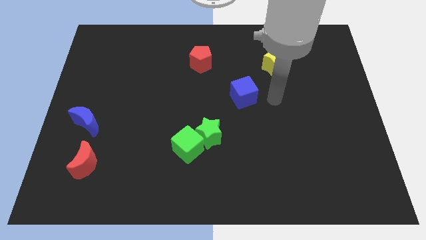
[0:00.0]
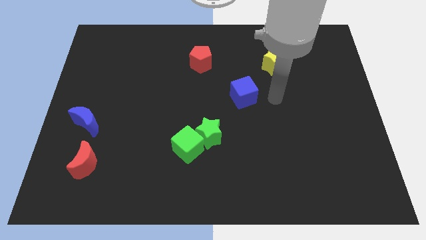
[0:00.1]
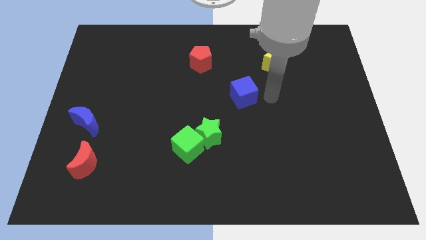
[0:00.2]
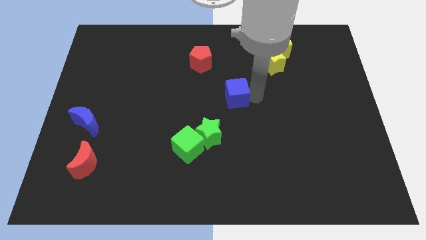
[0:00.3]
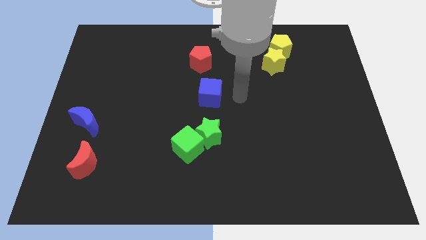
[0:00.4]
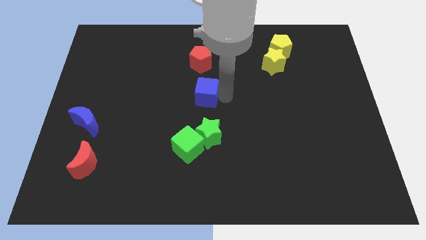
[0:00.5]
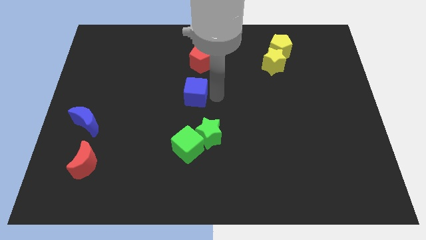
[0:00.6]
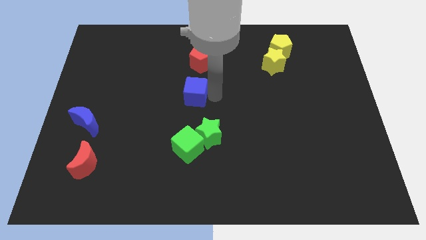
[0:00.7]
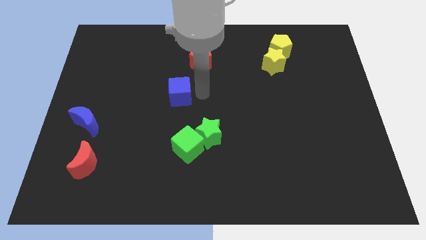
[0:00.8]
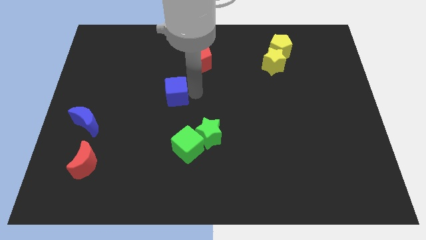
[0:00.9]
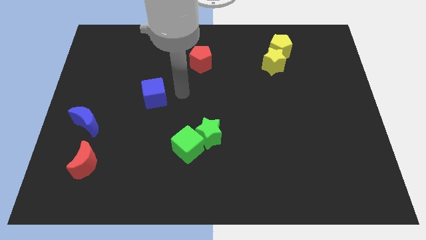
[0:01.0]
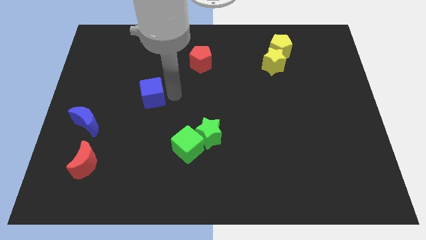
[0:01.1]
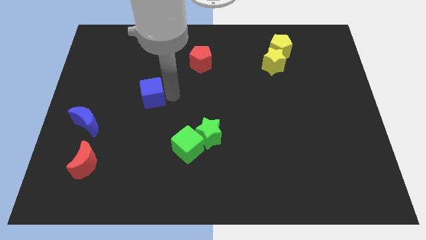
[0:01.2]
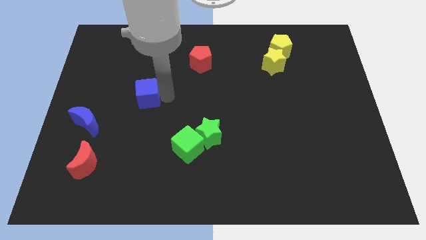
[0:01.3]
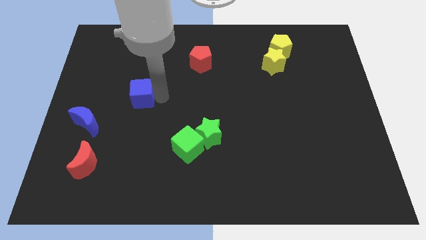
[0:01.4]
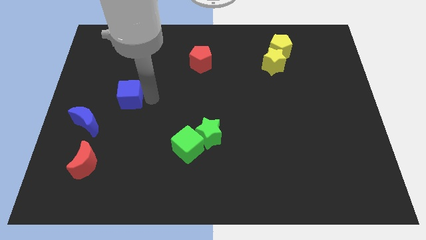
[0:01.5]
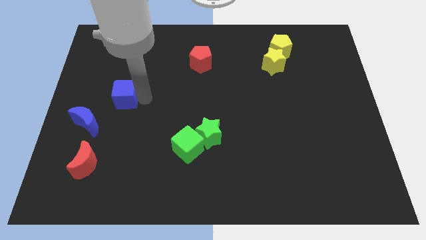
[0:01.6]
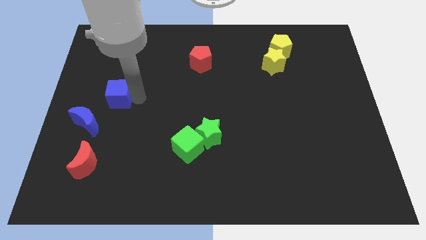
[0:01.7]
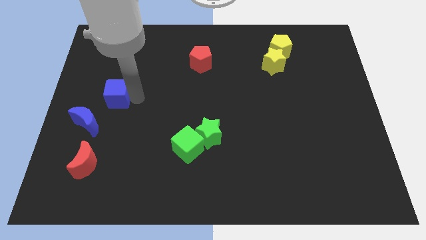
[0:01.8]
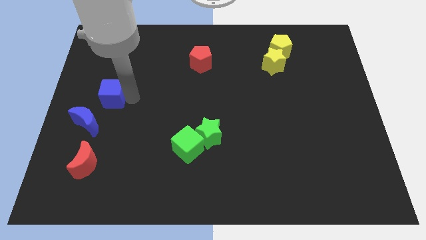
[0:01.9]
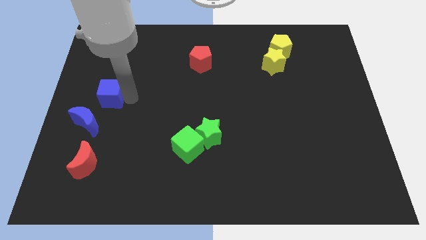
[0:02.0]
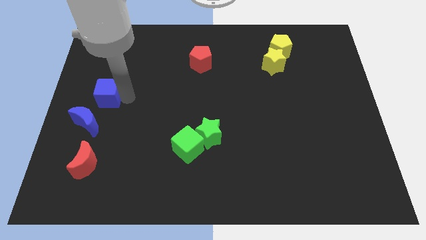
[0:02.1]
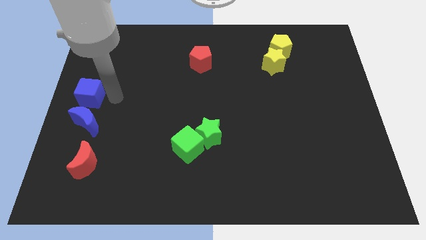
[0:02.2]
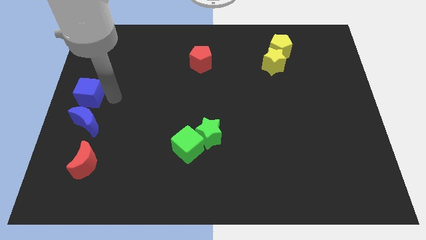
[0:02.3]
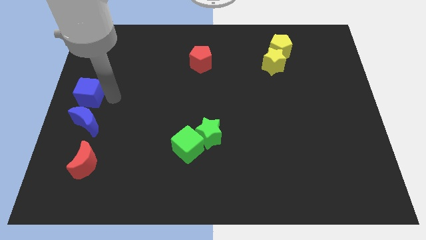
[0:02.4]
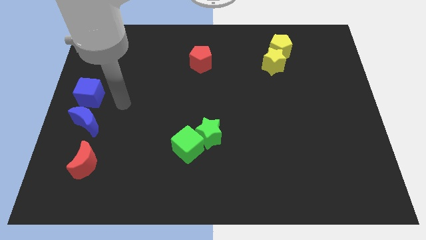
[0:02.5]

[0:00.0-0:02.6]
push the blue cube to the top of the blue crescent

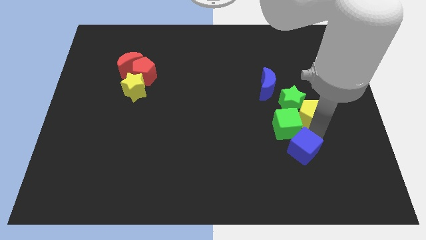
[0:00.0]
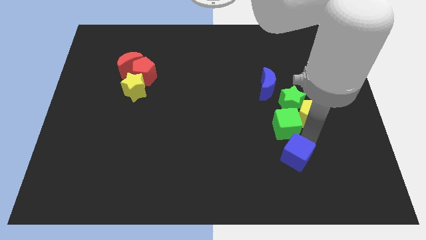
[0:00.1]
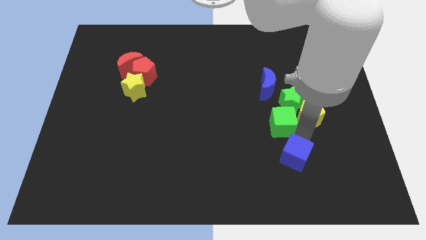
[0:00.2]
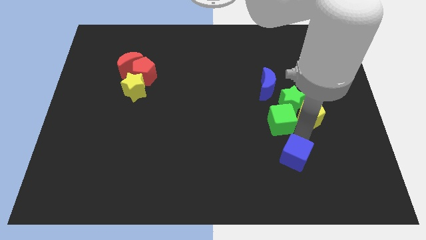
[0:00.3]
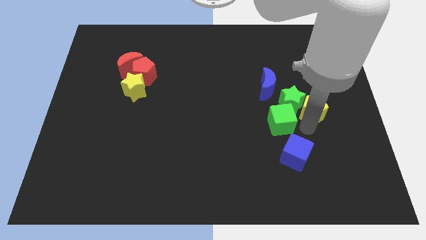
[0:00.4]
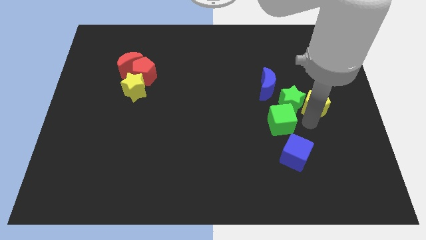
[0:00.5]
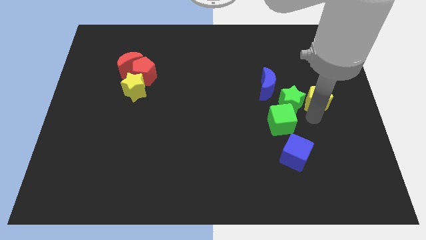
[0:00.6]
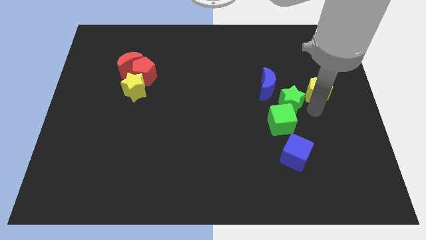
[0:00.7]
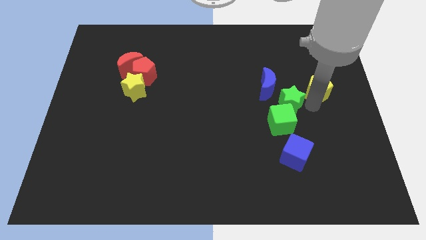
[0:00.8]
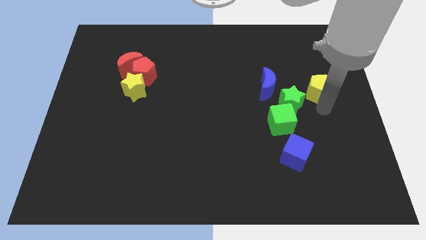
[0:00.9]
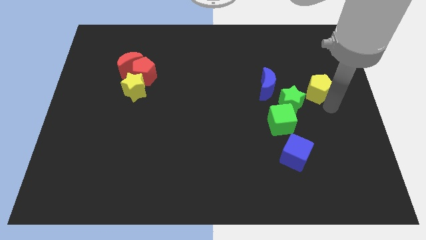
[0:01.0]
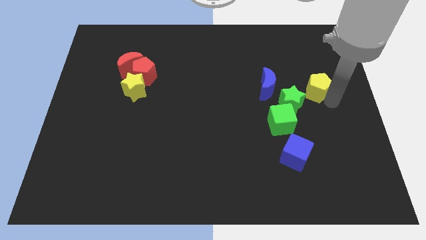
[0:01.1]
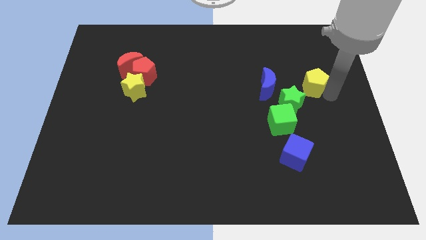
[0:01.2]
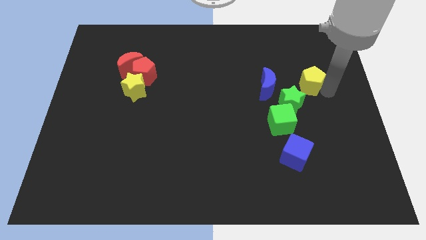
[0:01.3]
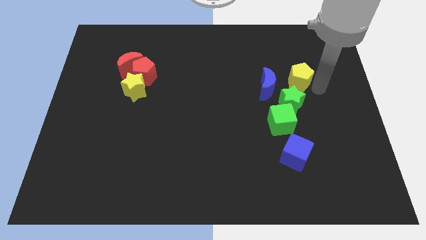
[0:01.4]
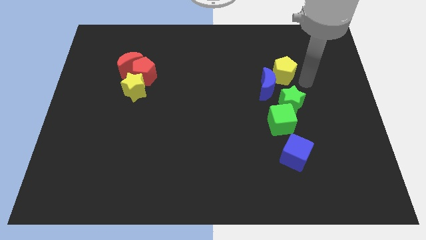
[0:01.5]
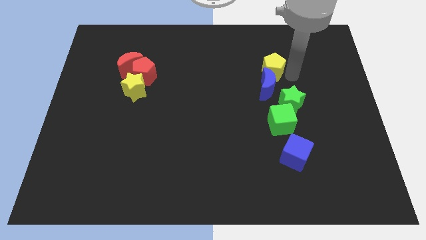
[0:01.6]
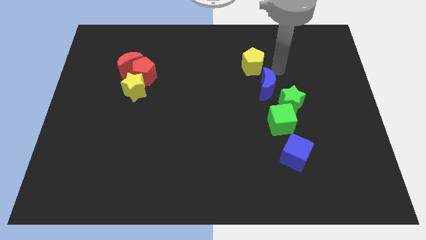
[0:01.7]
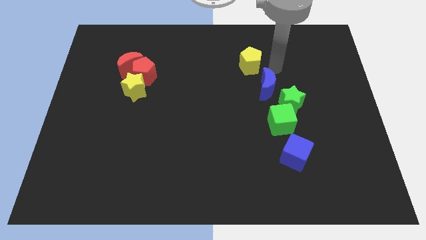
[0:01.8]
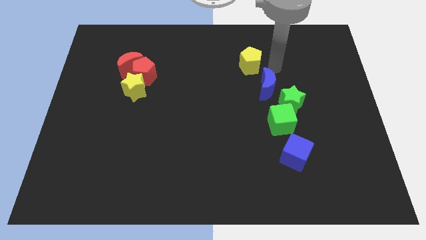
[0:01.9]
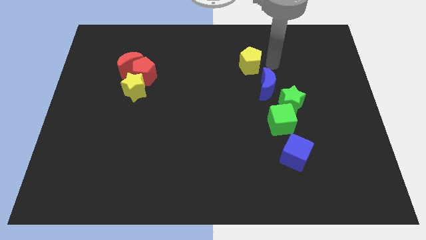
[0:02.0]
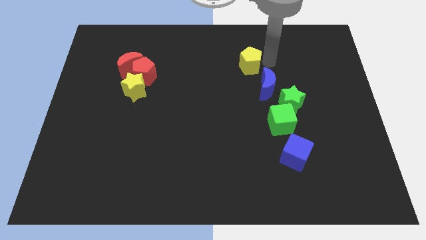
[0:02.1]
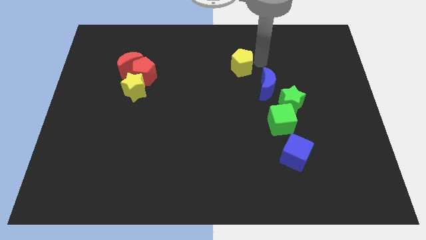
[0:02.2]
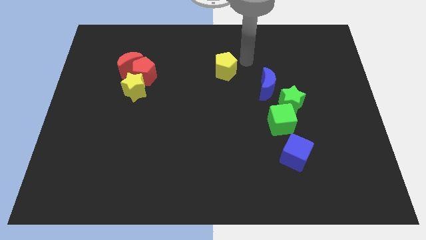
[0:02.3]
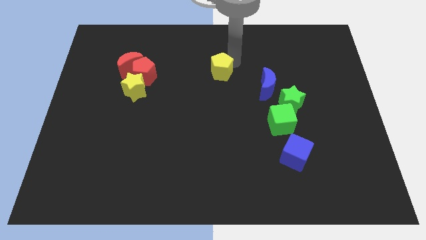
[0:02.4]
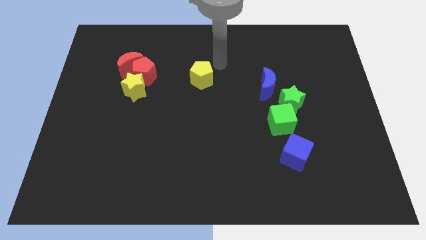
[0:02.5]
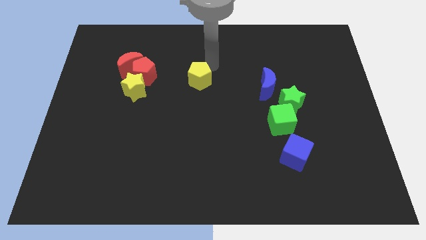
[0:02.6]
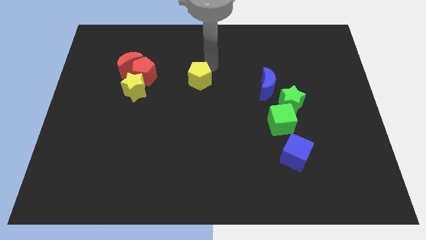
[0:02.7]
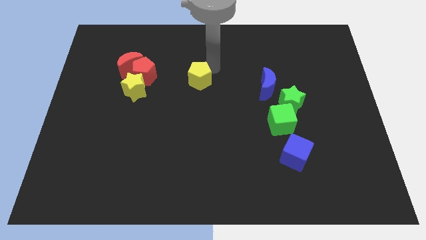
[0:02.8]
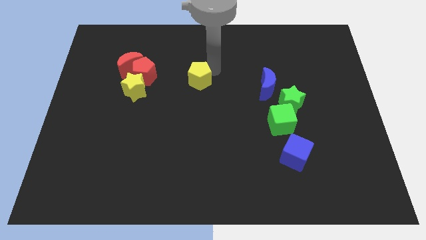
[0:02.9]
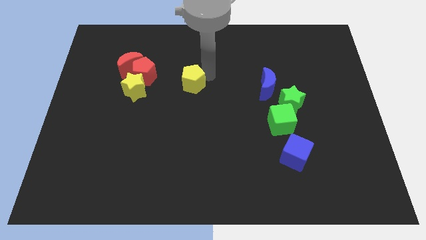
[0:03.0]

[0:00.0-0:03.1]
take the yellow pentagon towards the yellow star

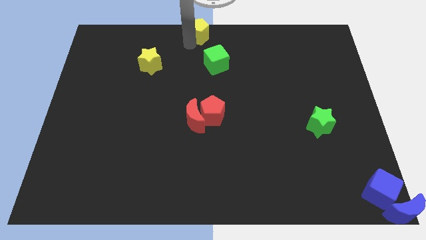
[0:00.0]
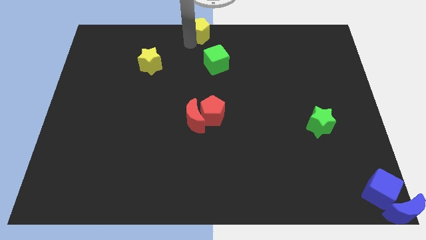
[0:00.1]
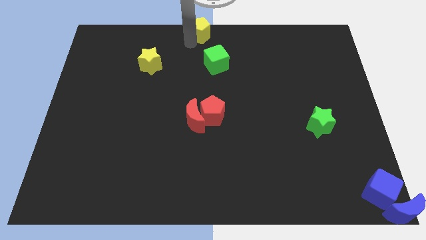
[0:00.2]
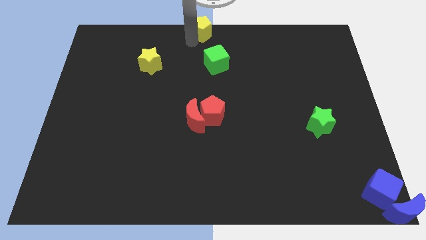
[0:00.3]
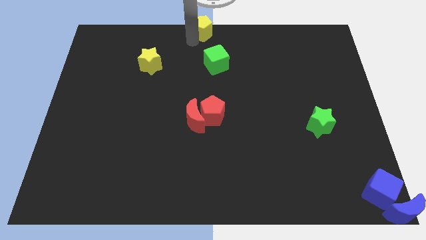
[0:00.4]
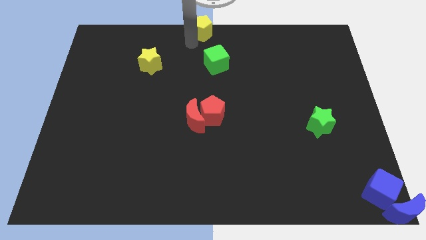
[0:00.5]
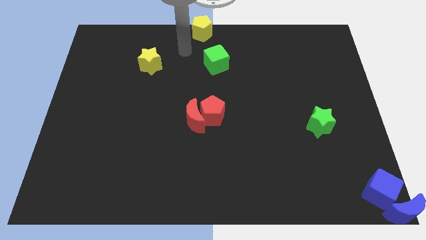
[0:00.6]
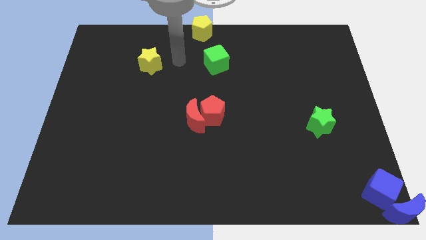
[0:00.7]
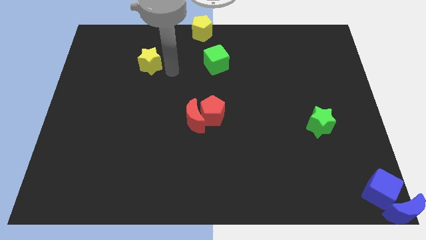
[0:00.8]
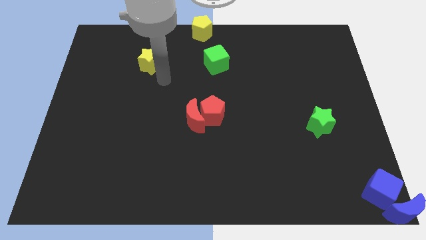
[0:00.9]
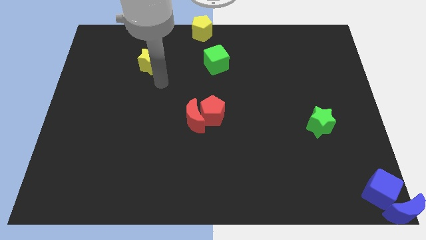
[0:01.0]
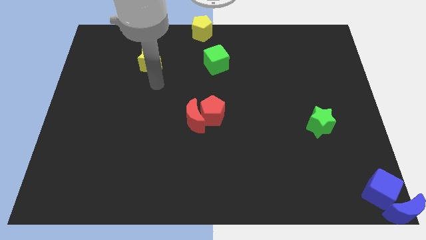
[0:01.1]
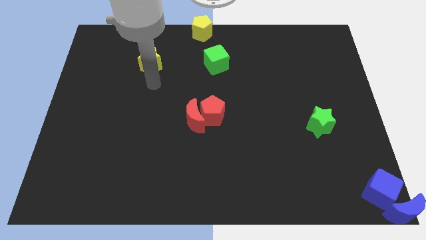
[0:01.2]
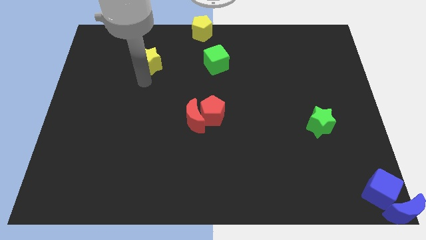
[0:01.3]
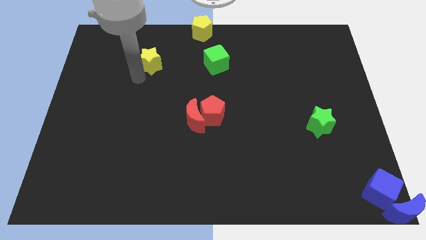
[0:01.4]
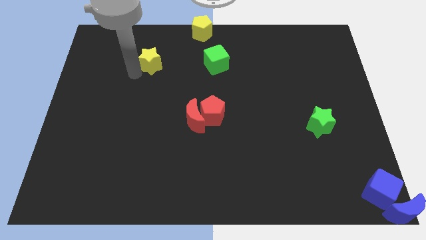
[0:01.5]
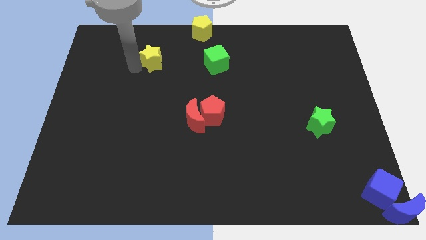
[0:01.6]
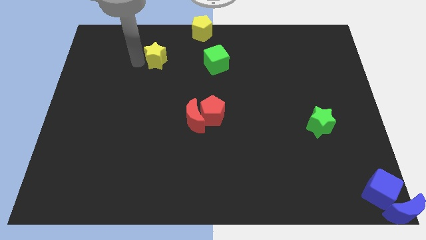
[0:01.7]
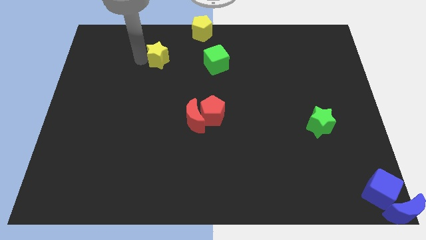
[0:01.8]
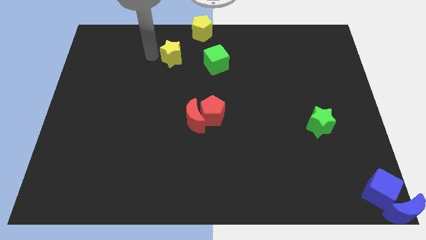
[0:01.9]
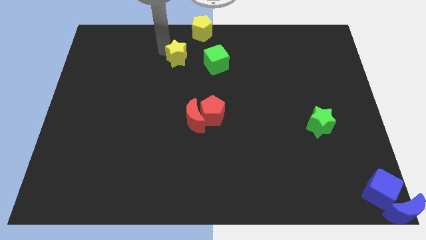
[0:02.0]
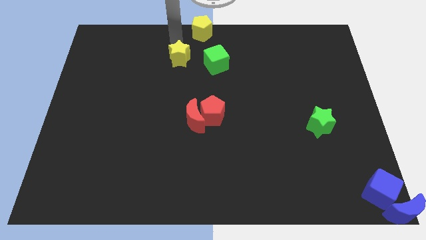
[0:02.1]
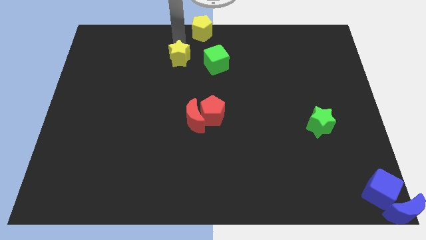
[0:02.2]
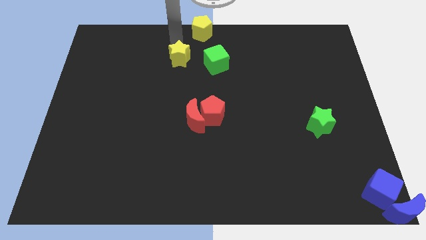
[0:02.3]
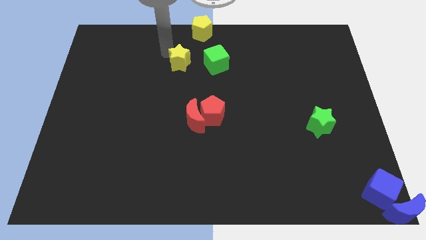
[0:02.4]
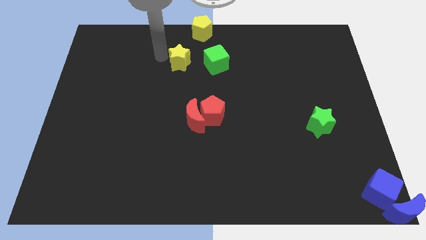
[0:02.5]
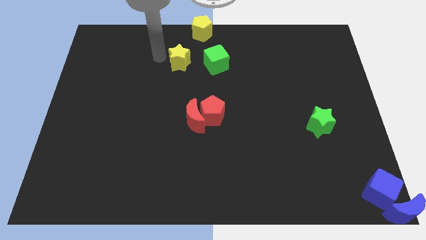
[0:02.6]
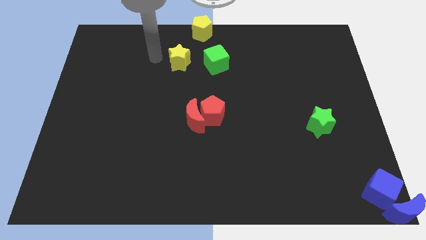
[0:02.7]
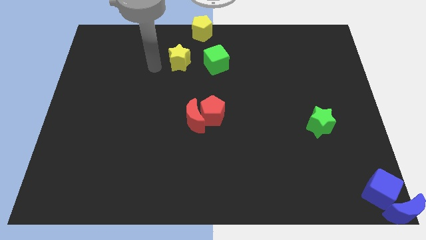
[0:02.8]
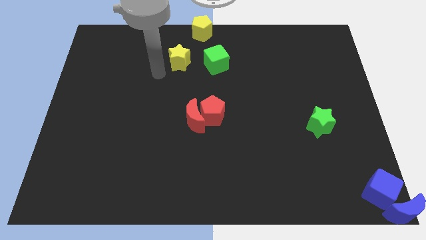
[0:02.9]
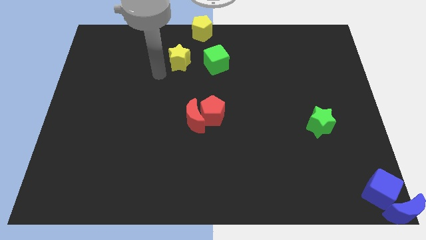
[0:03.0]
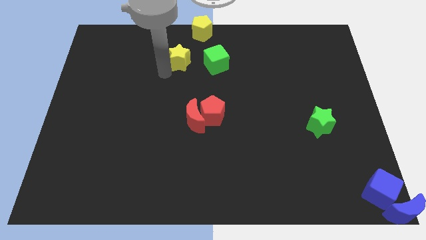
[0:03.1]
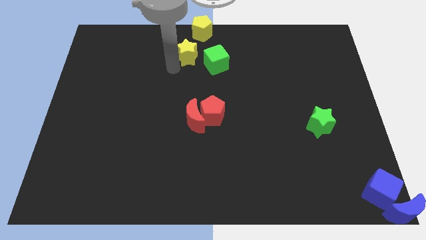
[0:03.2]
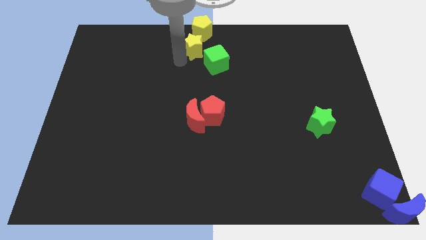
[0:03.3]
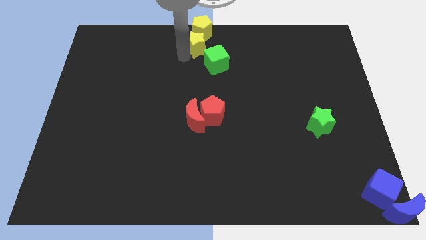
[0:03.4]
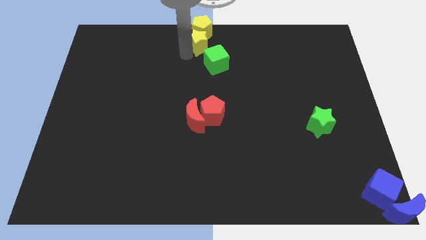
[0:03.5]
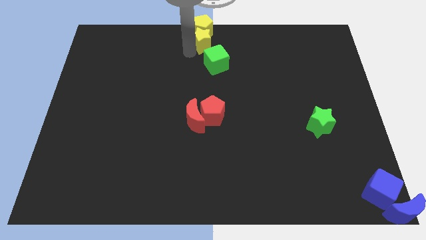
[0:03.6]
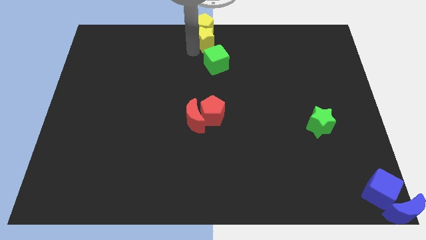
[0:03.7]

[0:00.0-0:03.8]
push the yellow star into the yellow pentagon
